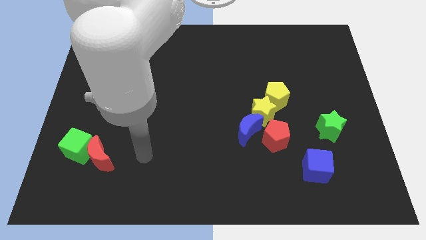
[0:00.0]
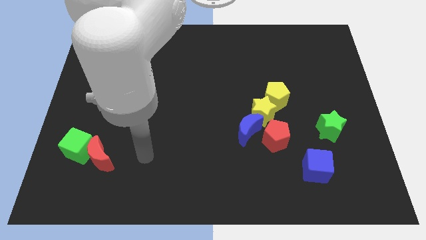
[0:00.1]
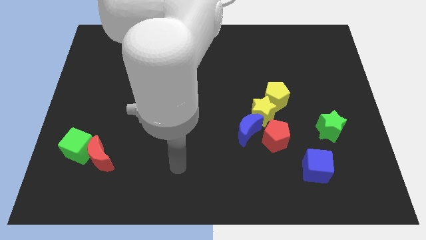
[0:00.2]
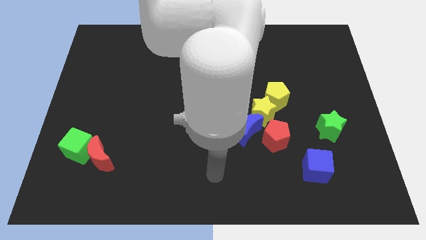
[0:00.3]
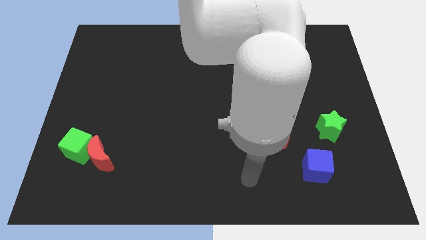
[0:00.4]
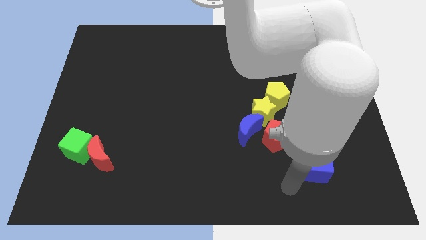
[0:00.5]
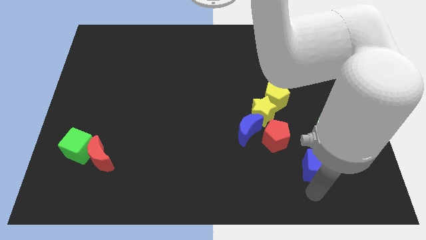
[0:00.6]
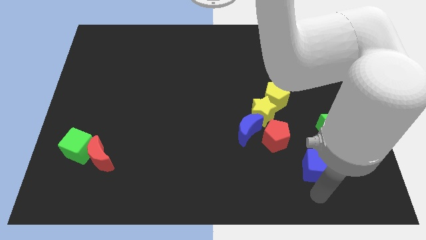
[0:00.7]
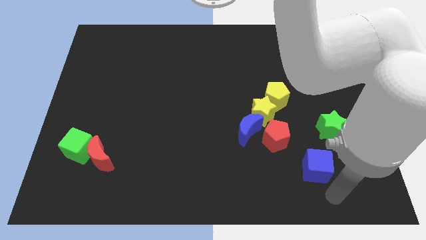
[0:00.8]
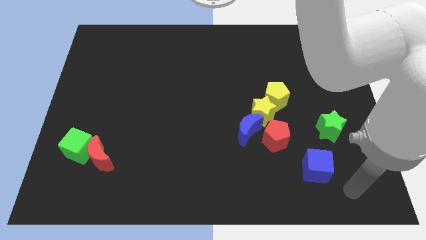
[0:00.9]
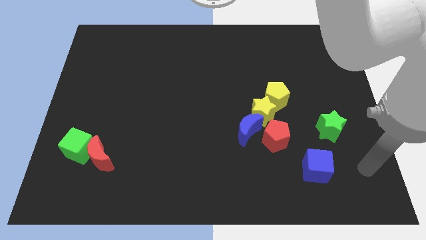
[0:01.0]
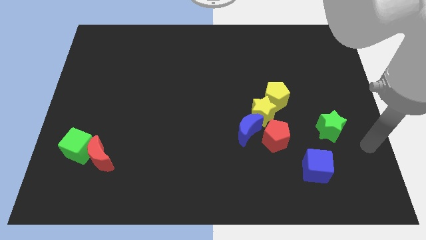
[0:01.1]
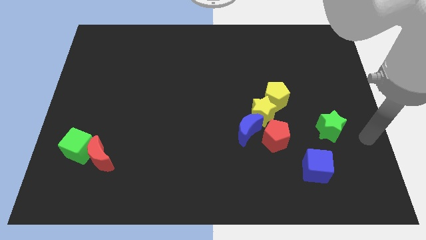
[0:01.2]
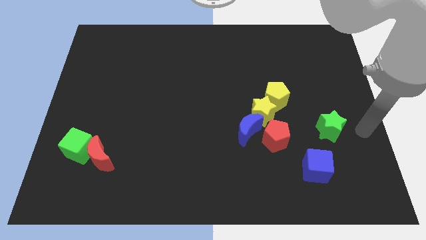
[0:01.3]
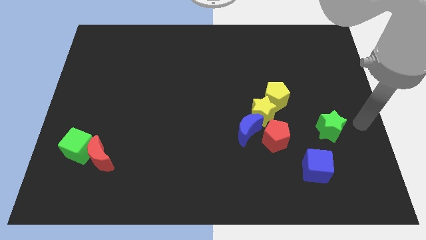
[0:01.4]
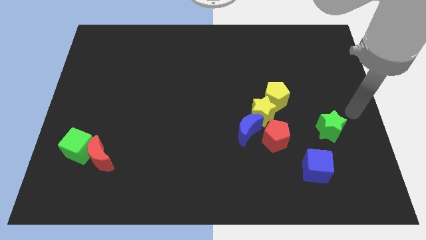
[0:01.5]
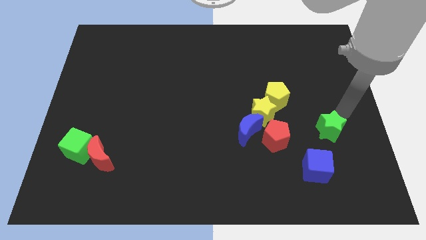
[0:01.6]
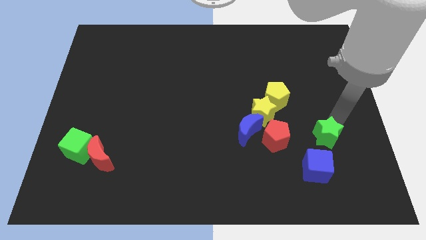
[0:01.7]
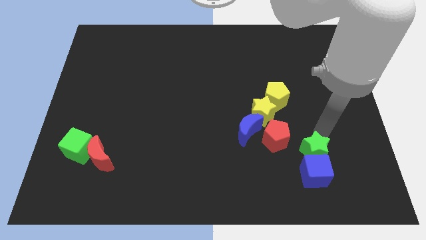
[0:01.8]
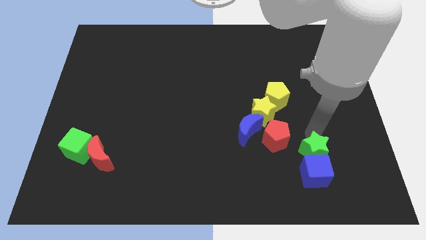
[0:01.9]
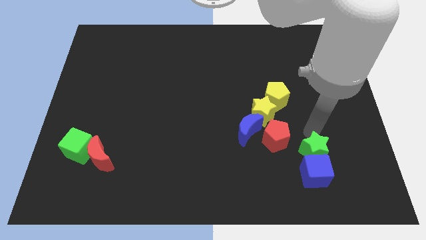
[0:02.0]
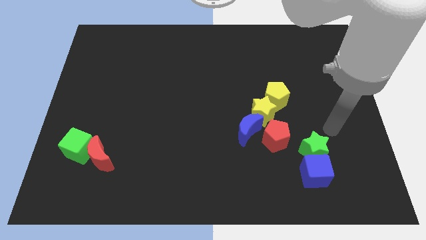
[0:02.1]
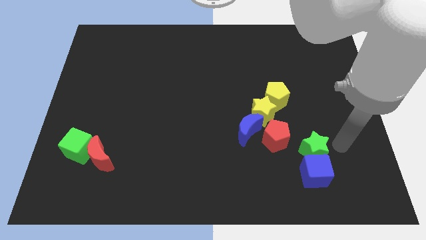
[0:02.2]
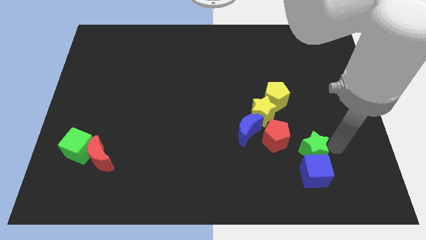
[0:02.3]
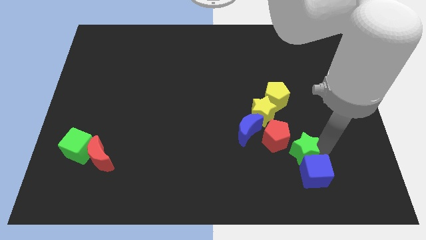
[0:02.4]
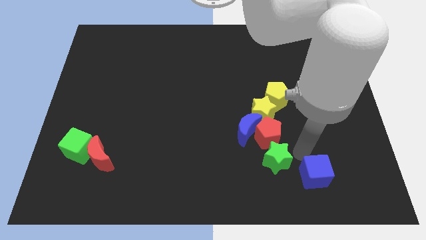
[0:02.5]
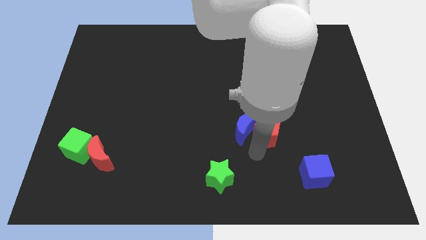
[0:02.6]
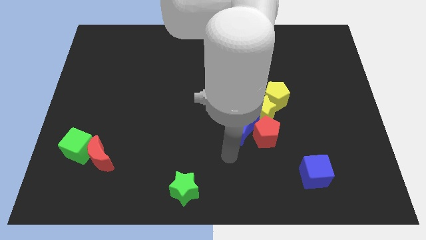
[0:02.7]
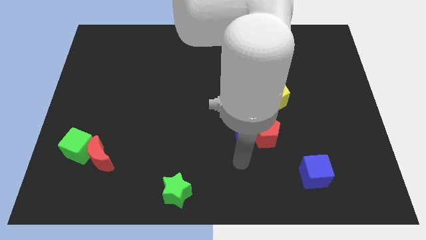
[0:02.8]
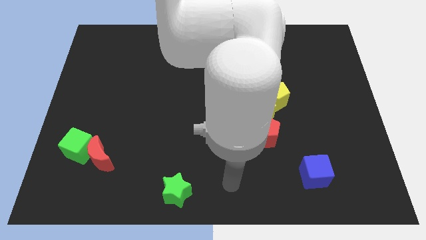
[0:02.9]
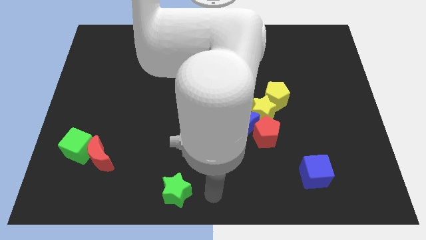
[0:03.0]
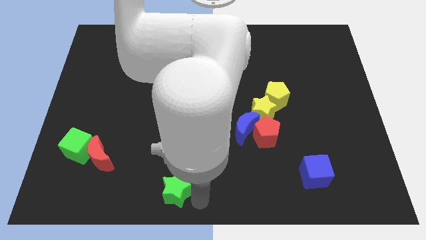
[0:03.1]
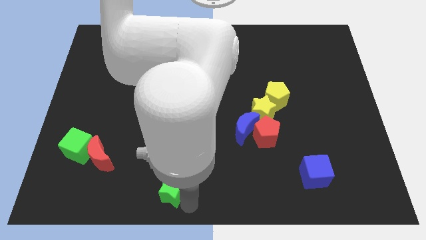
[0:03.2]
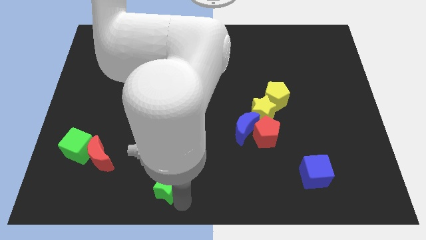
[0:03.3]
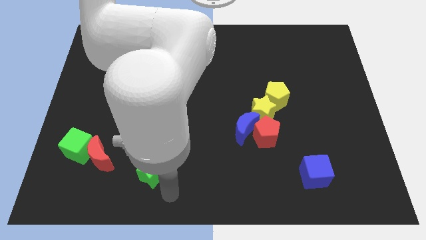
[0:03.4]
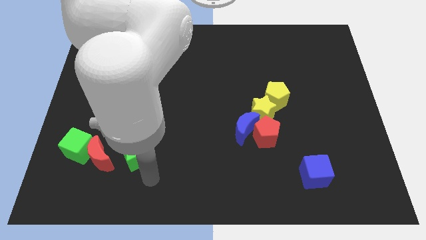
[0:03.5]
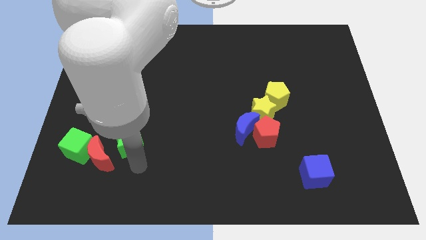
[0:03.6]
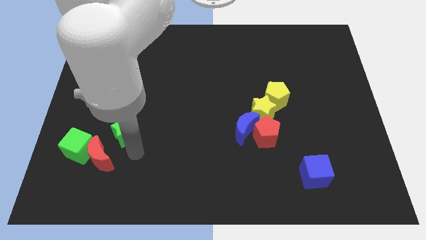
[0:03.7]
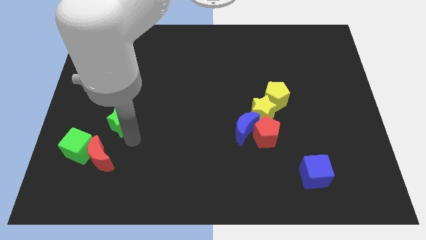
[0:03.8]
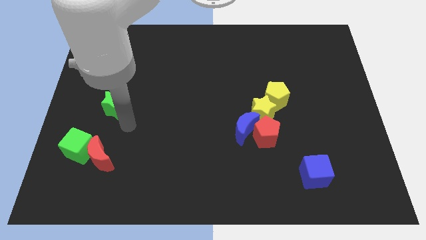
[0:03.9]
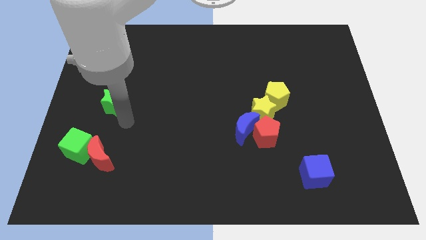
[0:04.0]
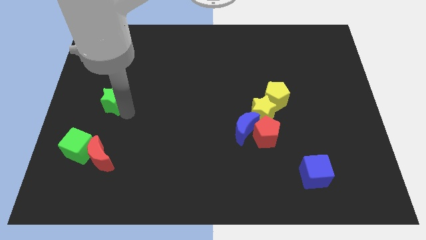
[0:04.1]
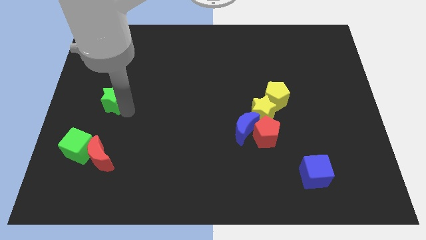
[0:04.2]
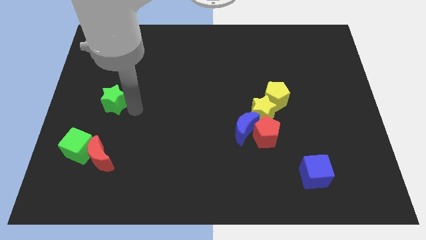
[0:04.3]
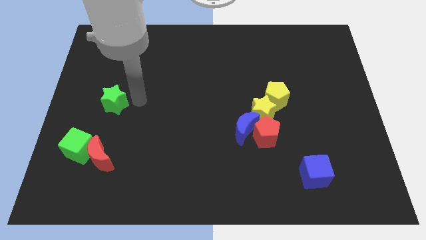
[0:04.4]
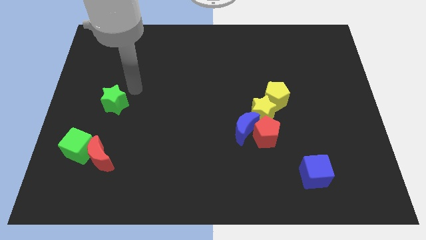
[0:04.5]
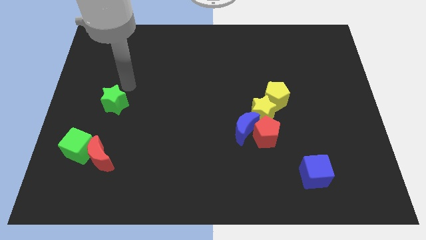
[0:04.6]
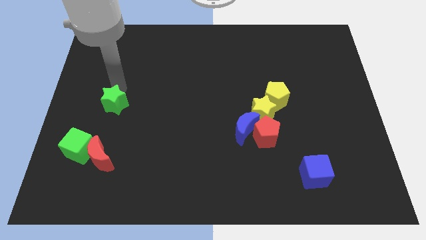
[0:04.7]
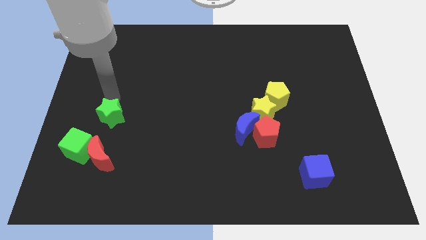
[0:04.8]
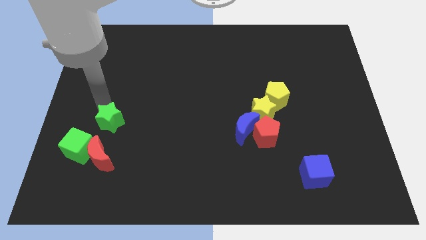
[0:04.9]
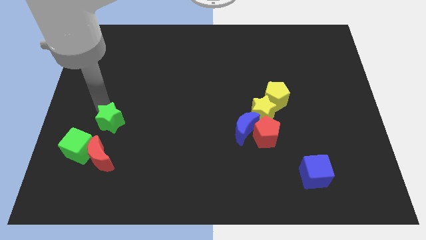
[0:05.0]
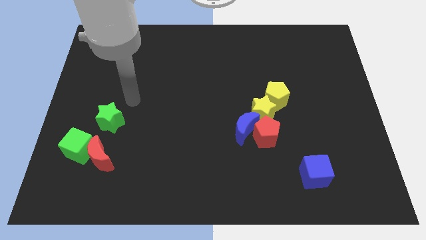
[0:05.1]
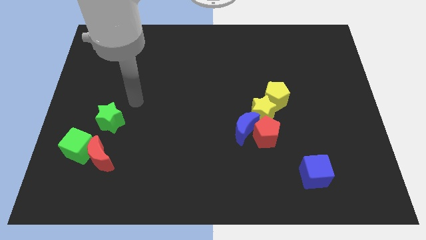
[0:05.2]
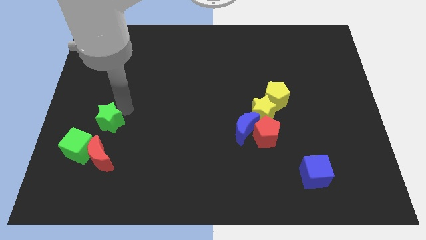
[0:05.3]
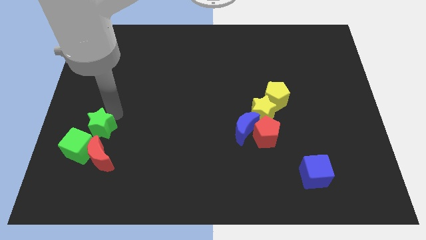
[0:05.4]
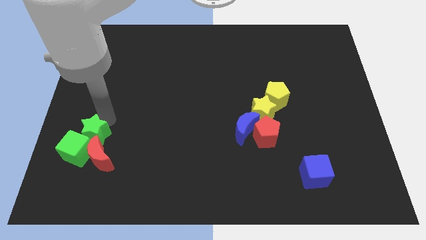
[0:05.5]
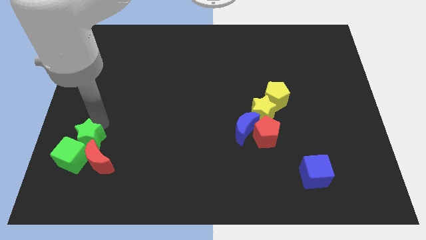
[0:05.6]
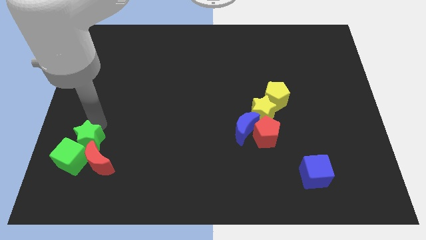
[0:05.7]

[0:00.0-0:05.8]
push the green star next to the green cube

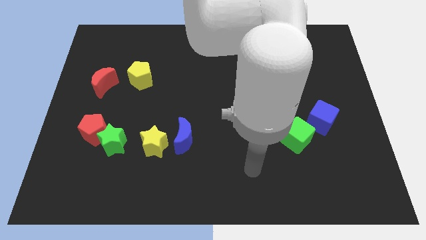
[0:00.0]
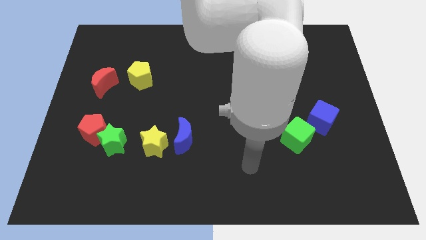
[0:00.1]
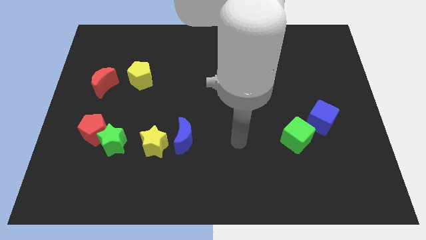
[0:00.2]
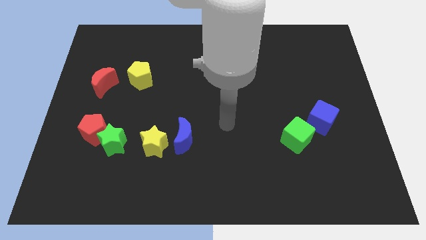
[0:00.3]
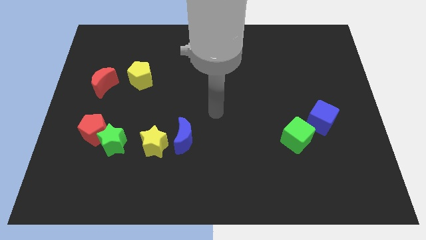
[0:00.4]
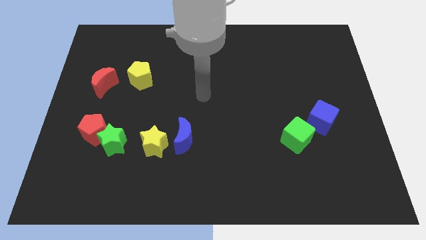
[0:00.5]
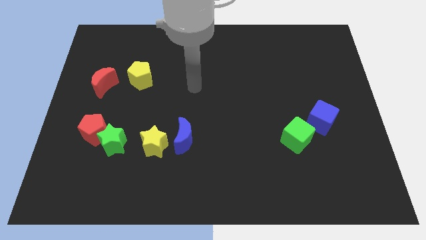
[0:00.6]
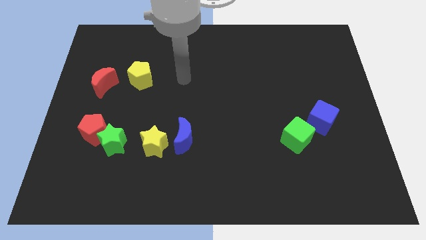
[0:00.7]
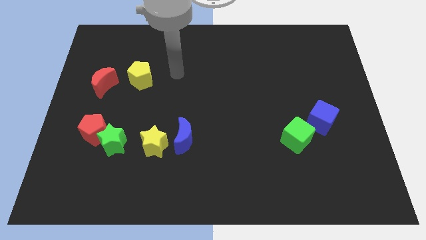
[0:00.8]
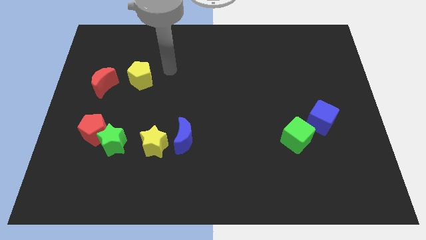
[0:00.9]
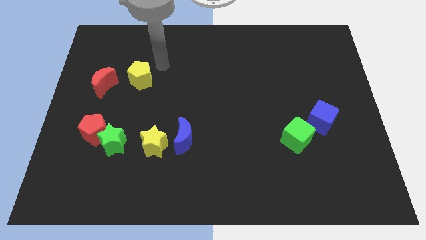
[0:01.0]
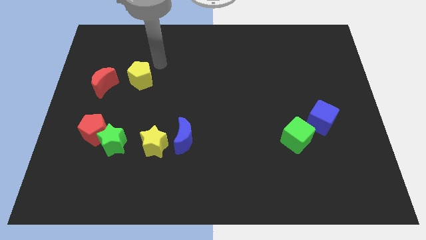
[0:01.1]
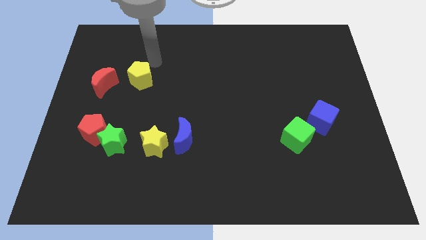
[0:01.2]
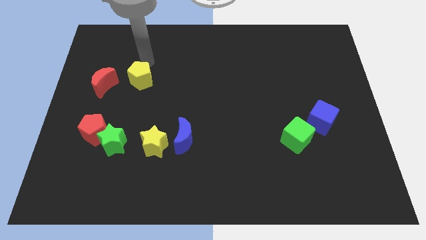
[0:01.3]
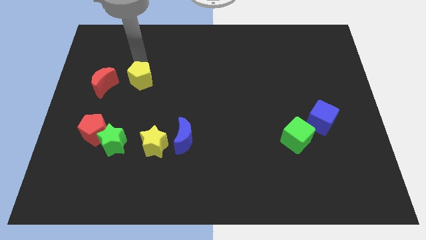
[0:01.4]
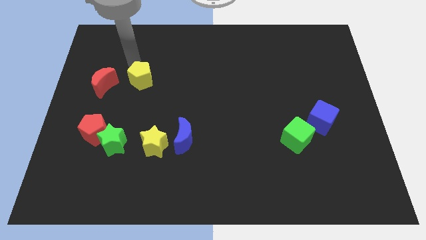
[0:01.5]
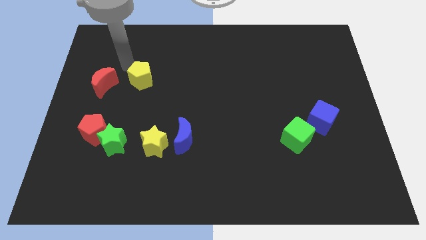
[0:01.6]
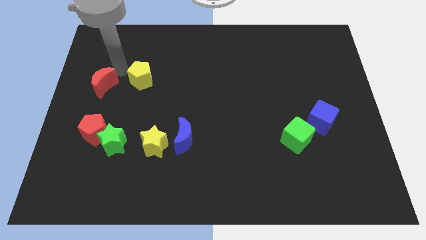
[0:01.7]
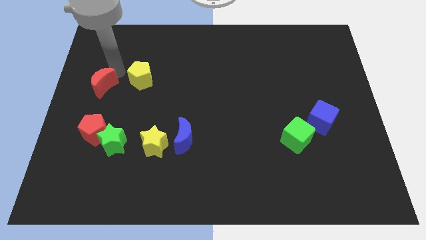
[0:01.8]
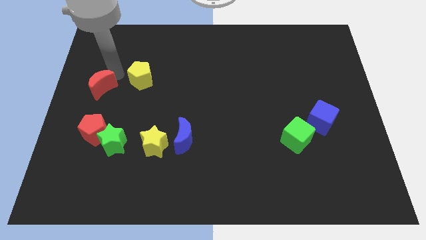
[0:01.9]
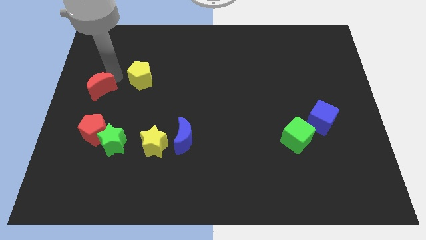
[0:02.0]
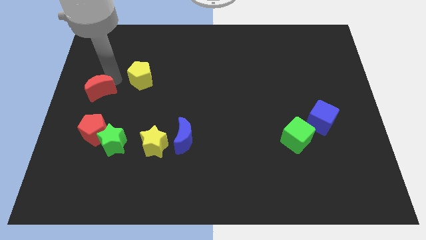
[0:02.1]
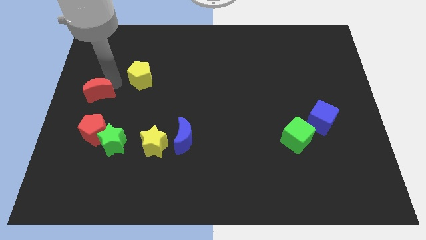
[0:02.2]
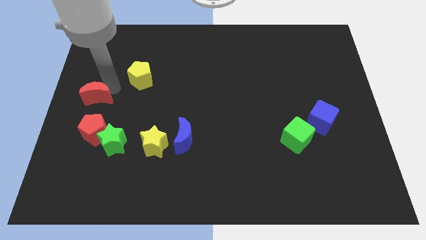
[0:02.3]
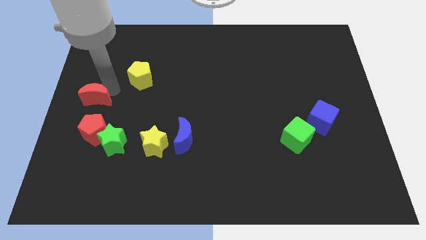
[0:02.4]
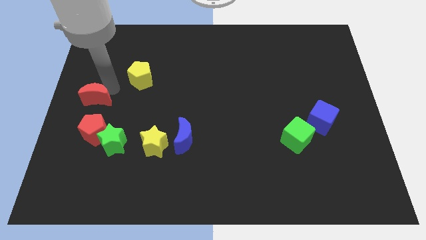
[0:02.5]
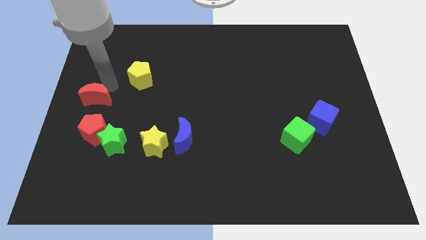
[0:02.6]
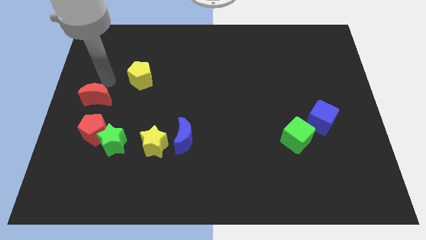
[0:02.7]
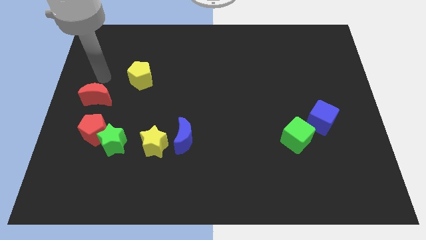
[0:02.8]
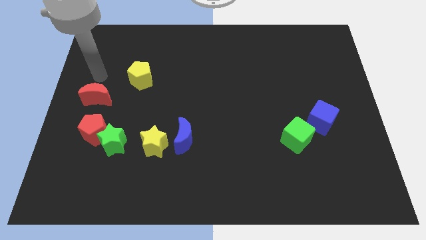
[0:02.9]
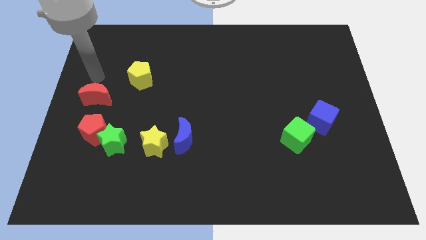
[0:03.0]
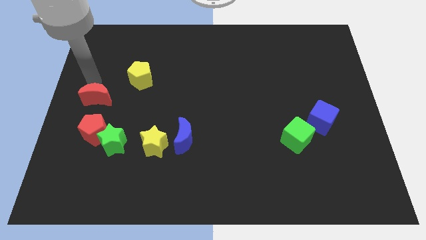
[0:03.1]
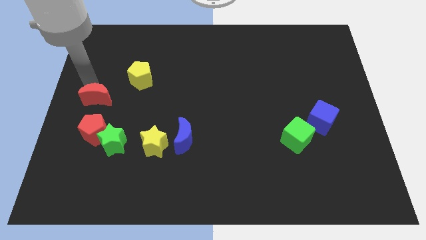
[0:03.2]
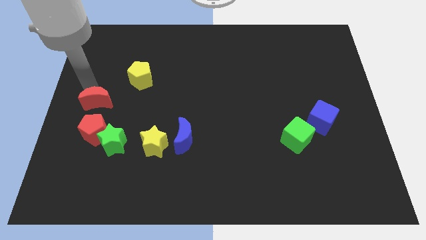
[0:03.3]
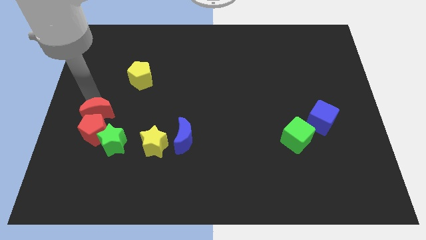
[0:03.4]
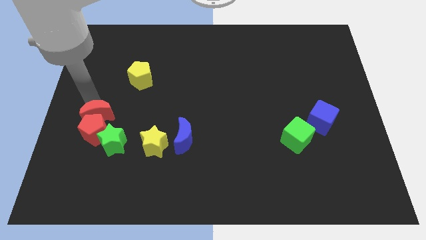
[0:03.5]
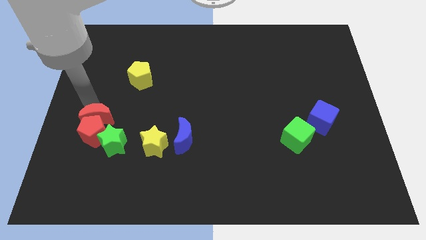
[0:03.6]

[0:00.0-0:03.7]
move the red moon next to the red pentagon
